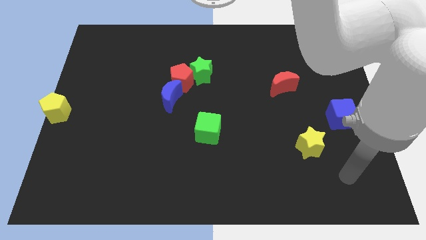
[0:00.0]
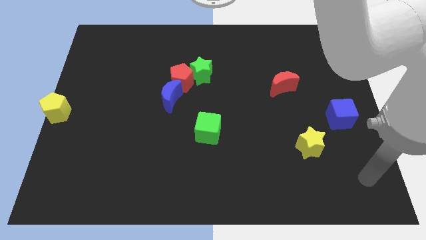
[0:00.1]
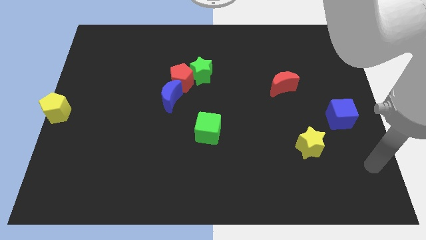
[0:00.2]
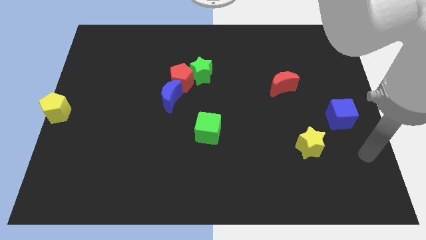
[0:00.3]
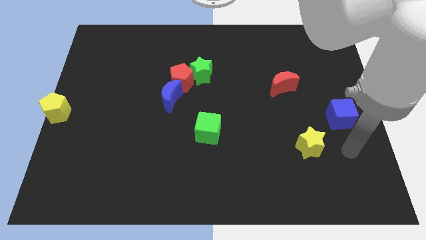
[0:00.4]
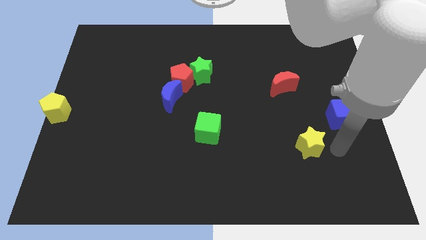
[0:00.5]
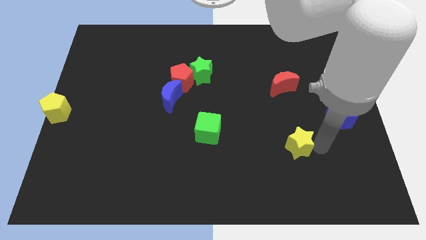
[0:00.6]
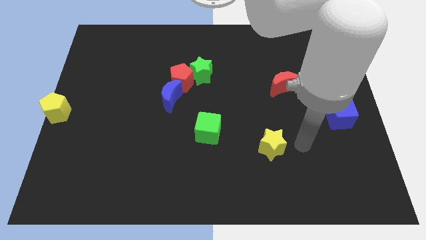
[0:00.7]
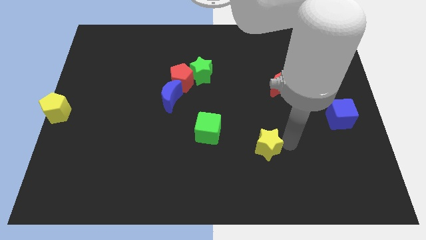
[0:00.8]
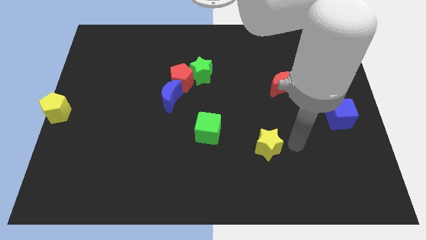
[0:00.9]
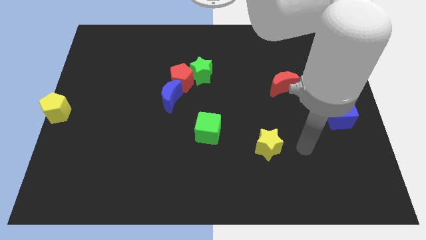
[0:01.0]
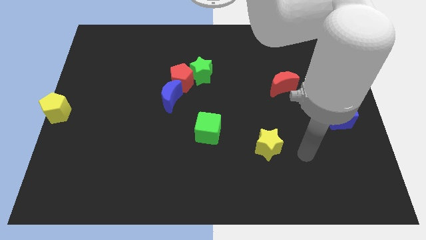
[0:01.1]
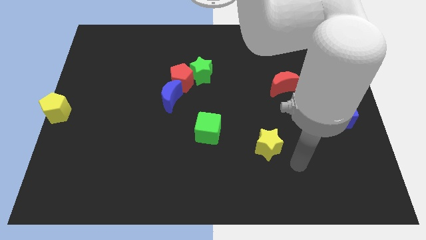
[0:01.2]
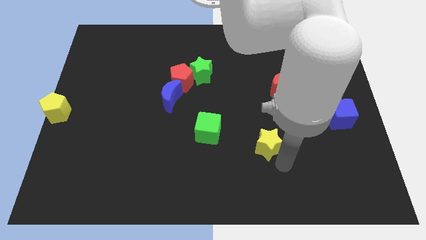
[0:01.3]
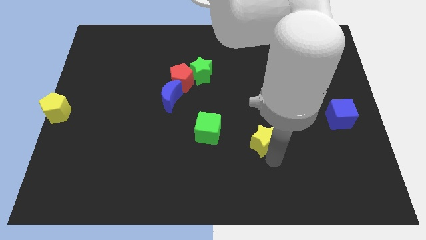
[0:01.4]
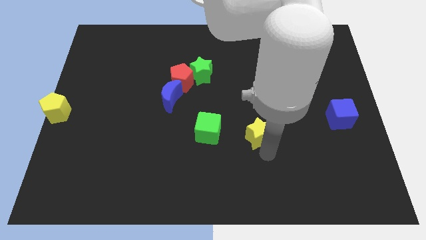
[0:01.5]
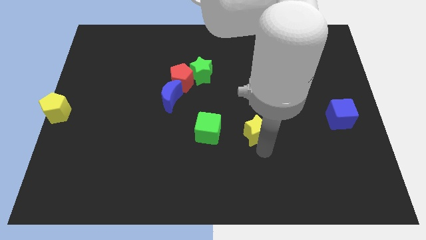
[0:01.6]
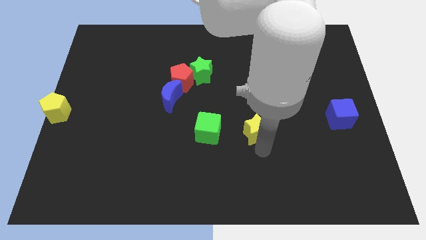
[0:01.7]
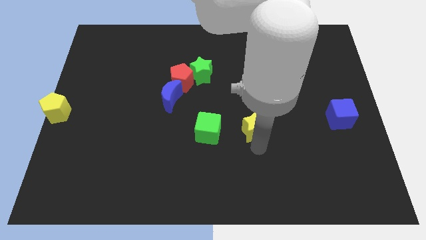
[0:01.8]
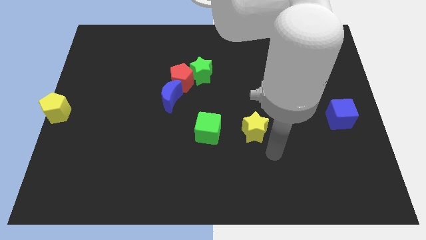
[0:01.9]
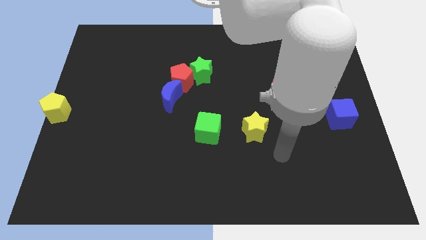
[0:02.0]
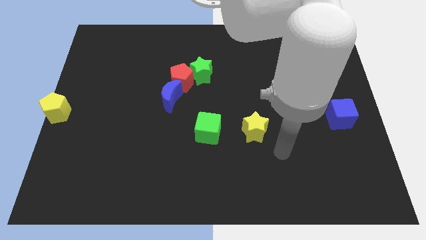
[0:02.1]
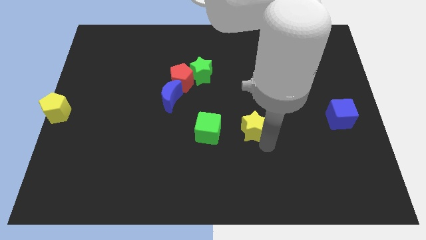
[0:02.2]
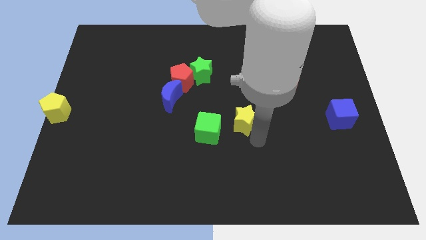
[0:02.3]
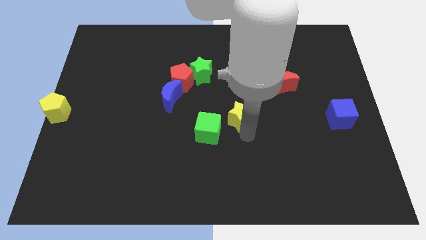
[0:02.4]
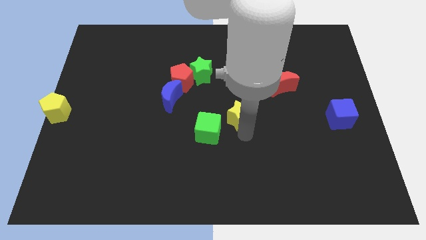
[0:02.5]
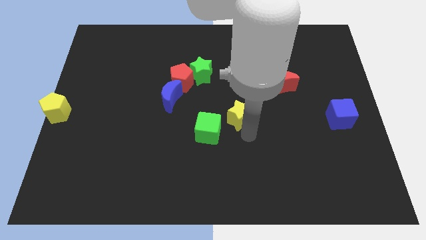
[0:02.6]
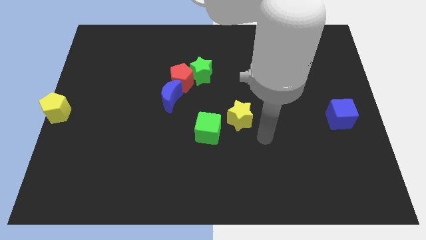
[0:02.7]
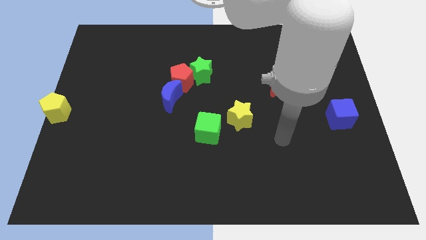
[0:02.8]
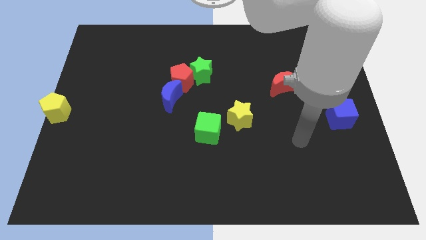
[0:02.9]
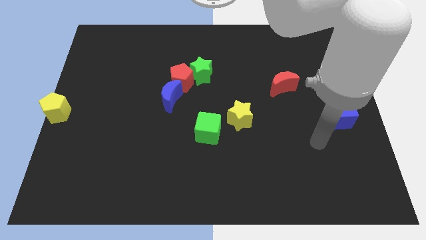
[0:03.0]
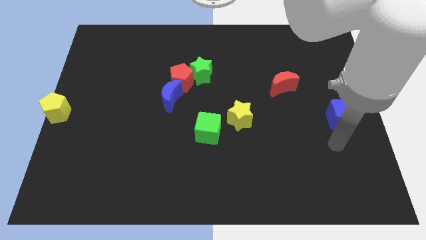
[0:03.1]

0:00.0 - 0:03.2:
move the yellow star to right side of the green cube

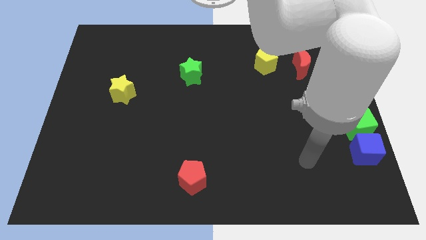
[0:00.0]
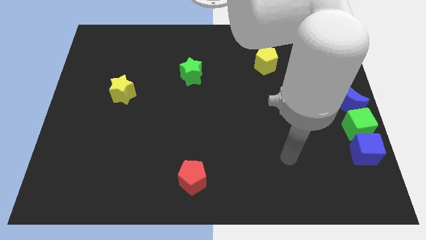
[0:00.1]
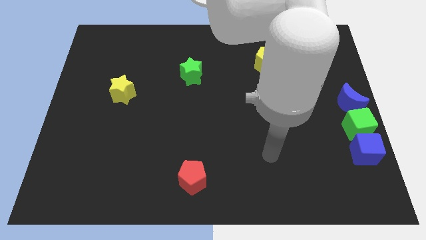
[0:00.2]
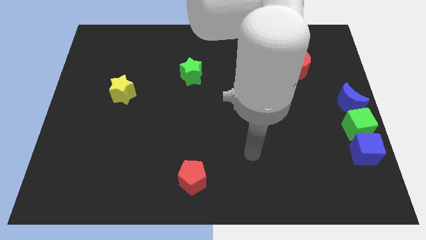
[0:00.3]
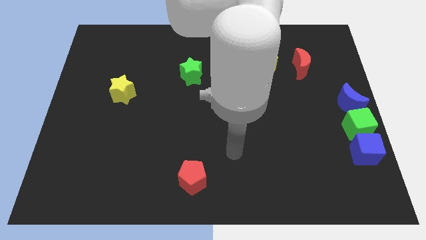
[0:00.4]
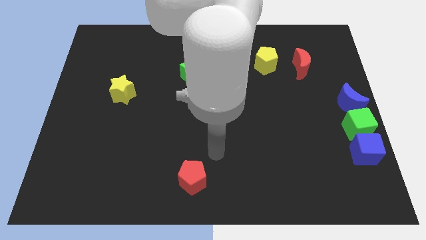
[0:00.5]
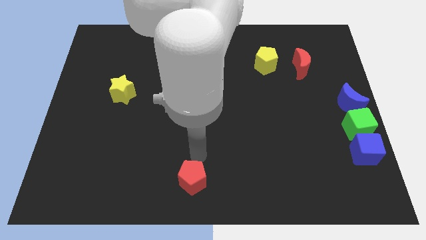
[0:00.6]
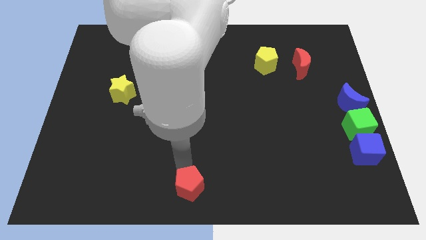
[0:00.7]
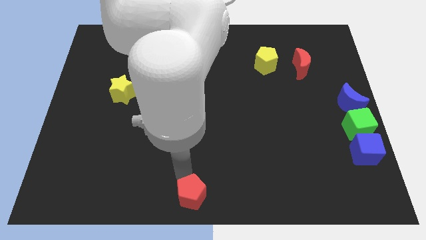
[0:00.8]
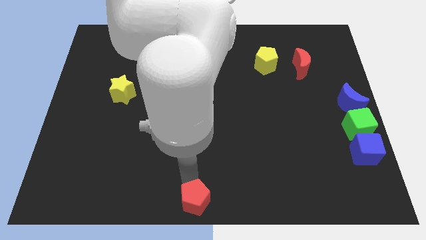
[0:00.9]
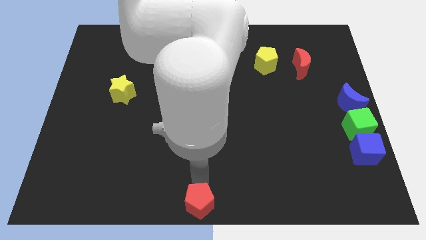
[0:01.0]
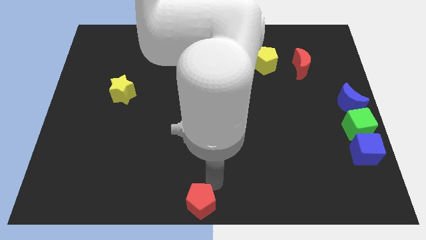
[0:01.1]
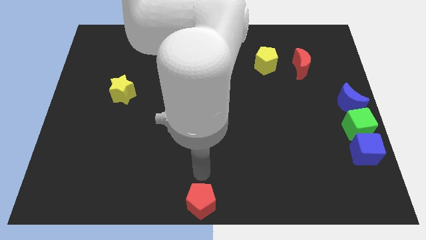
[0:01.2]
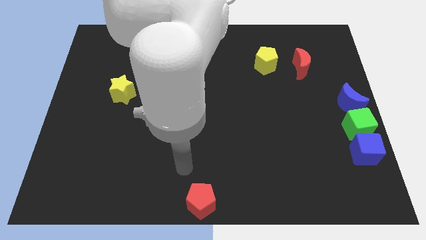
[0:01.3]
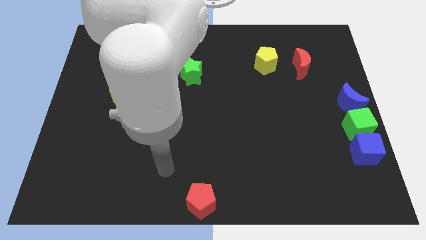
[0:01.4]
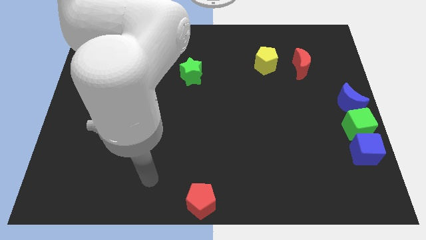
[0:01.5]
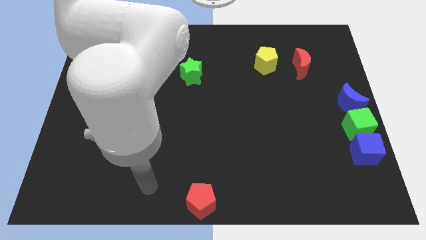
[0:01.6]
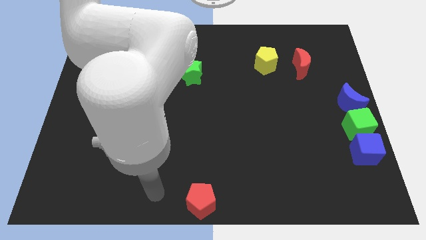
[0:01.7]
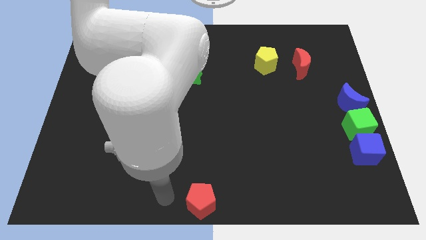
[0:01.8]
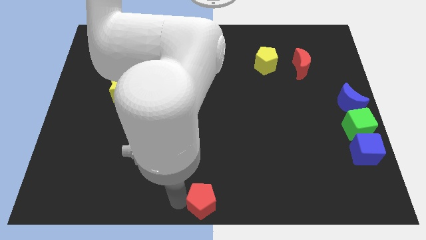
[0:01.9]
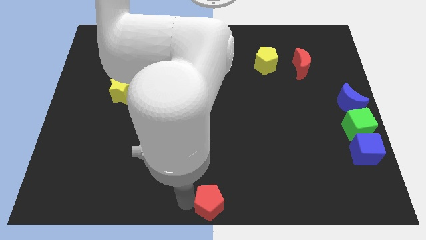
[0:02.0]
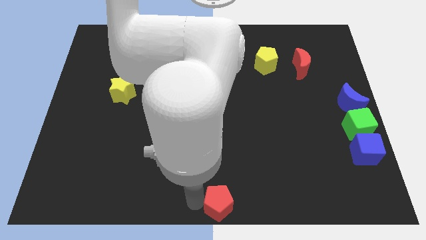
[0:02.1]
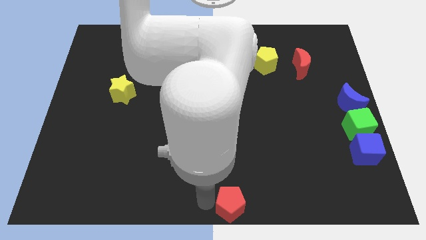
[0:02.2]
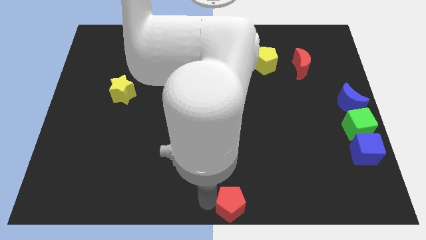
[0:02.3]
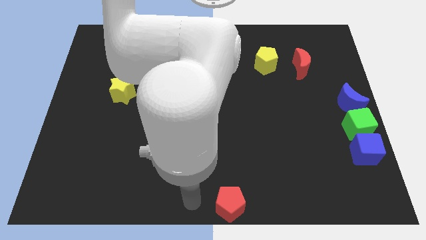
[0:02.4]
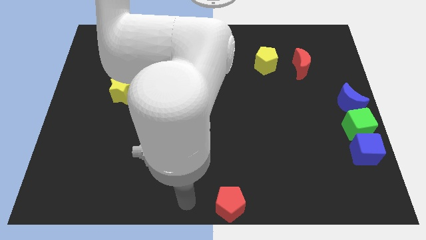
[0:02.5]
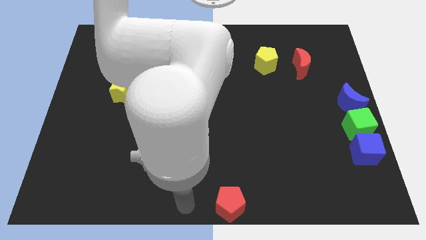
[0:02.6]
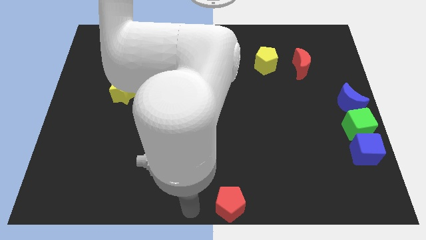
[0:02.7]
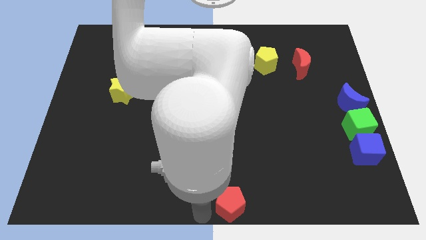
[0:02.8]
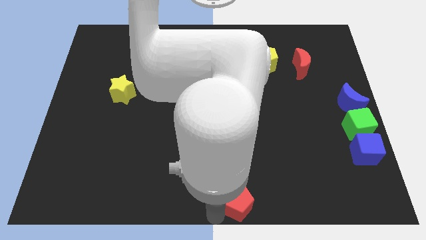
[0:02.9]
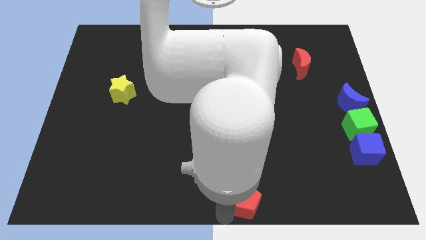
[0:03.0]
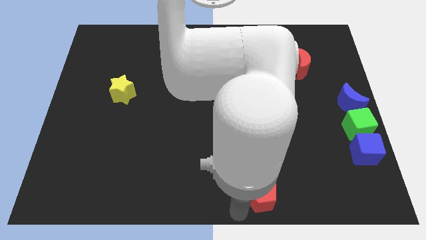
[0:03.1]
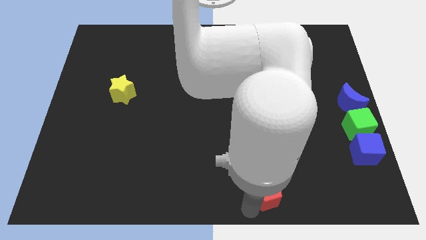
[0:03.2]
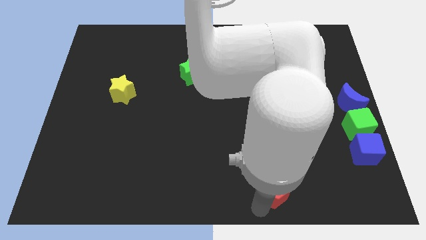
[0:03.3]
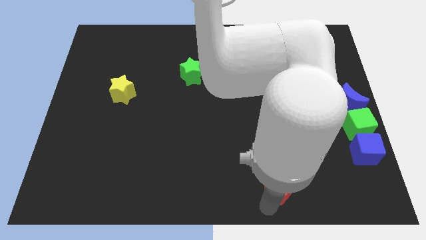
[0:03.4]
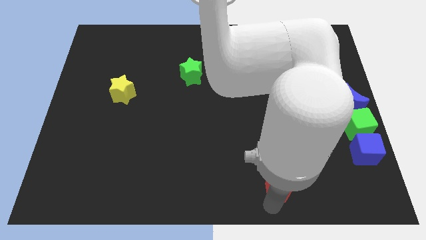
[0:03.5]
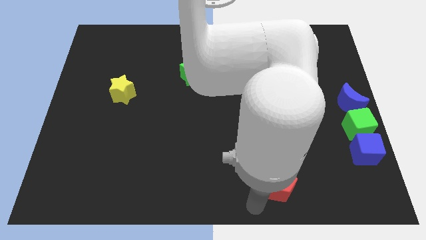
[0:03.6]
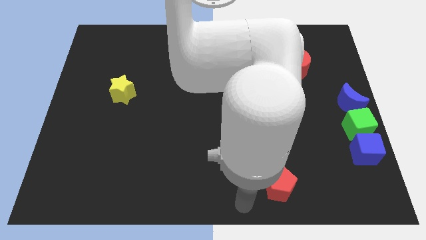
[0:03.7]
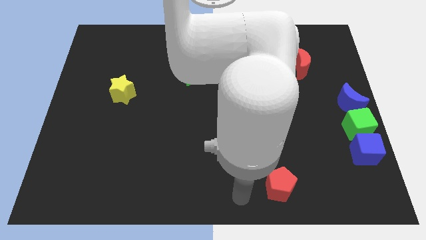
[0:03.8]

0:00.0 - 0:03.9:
push the red pentagon towards the vertical line of blocks

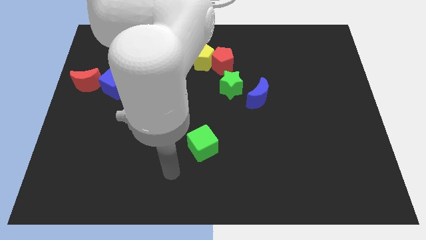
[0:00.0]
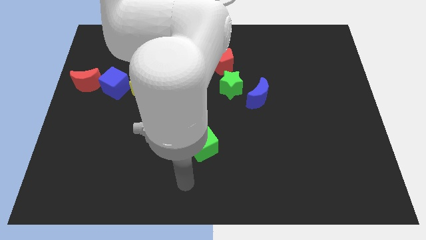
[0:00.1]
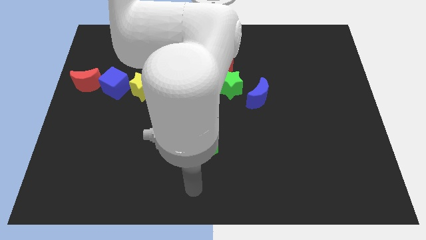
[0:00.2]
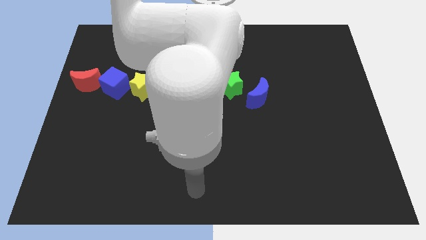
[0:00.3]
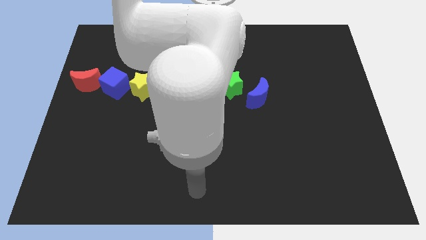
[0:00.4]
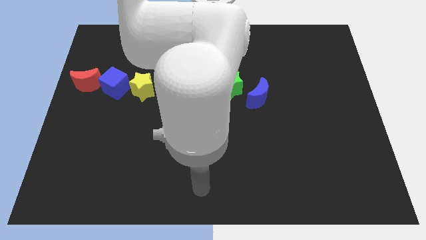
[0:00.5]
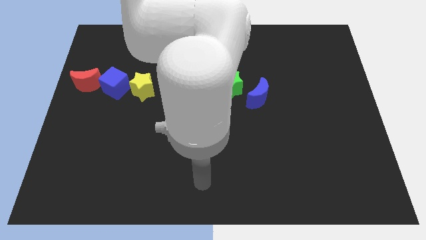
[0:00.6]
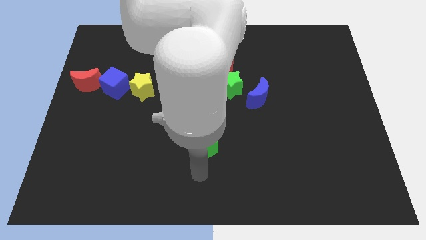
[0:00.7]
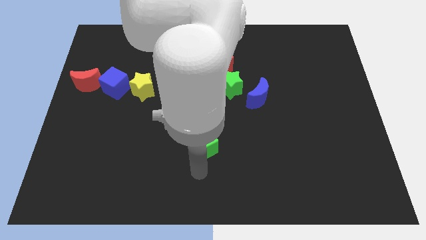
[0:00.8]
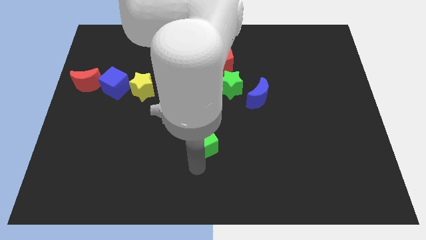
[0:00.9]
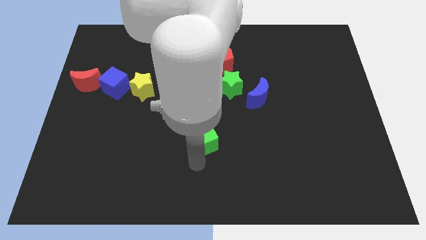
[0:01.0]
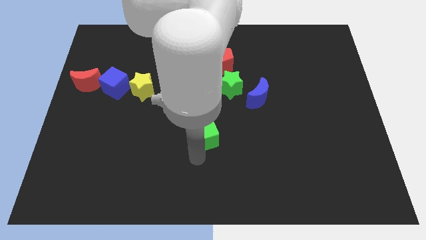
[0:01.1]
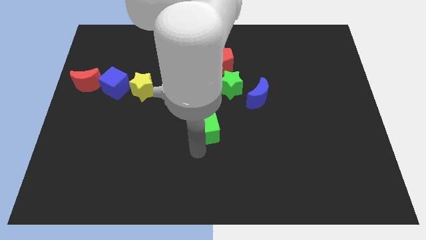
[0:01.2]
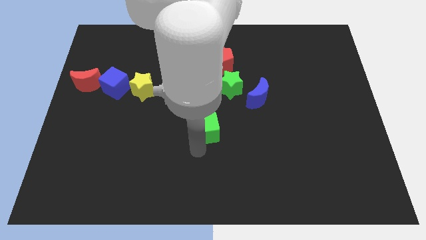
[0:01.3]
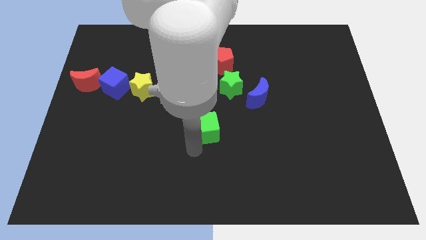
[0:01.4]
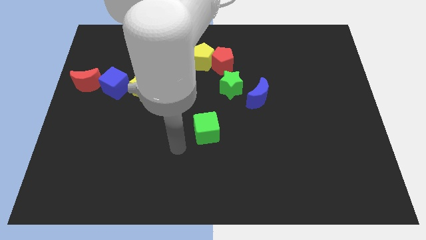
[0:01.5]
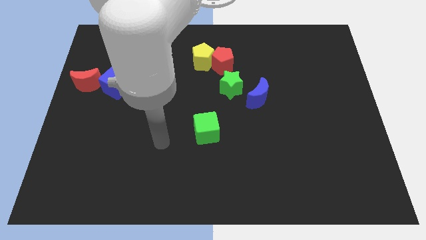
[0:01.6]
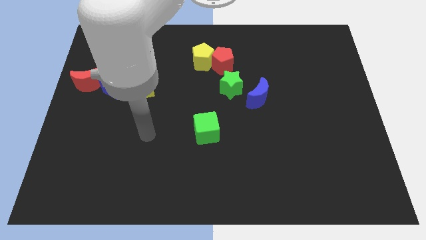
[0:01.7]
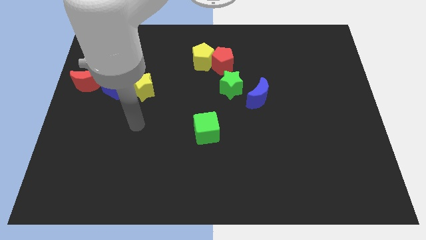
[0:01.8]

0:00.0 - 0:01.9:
move the green cube towards top

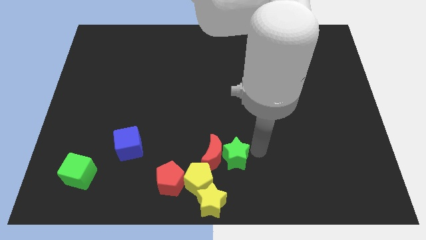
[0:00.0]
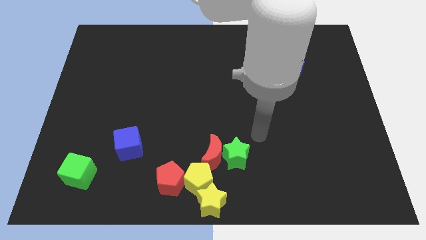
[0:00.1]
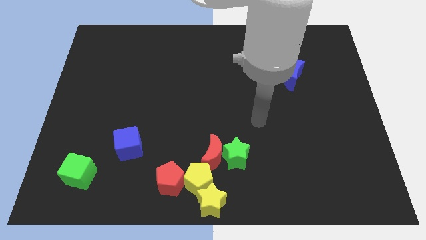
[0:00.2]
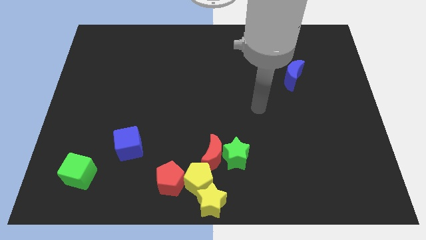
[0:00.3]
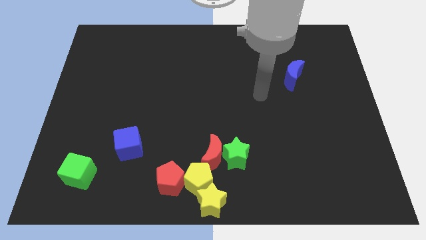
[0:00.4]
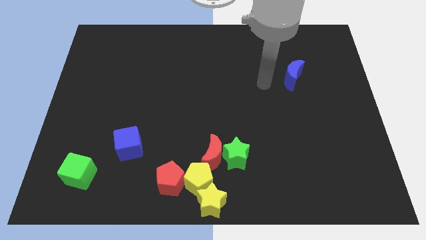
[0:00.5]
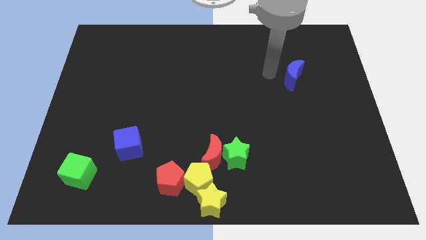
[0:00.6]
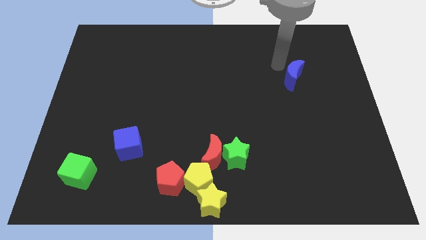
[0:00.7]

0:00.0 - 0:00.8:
go away from the green star
